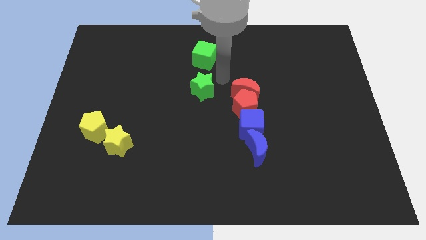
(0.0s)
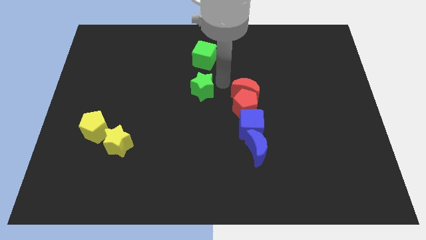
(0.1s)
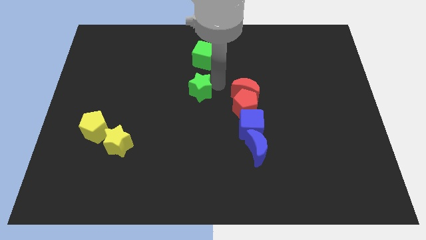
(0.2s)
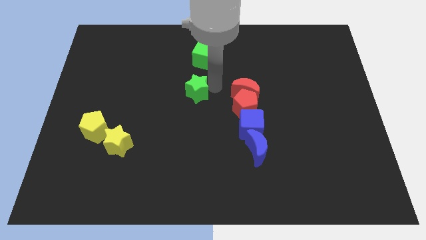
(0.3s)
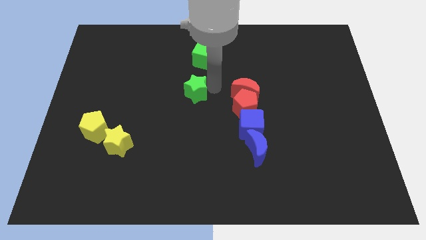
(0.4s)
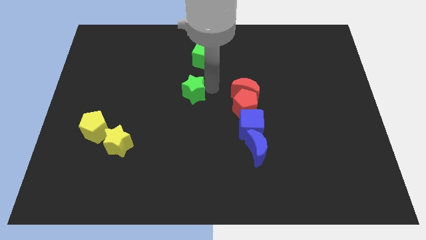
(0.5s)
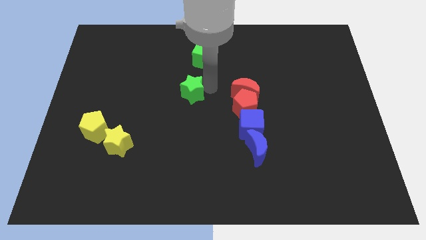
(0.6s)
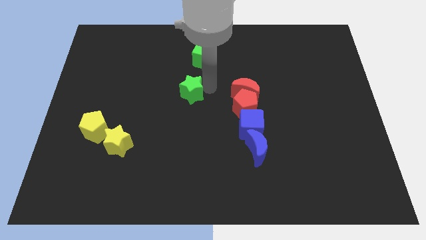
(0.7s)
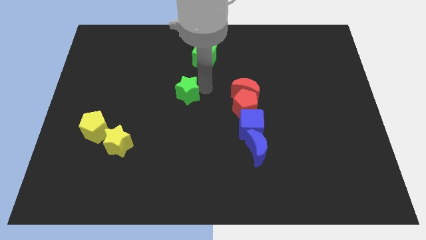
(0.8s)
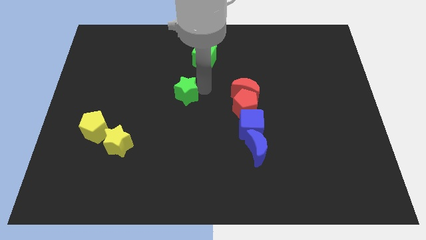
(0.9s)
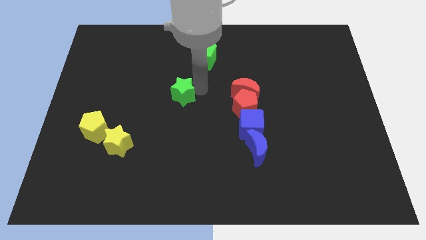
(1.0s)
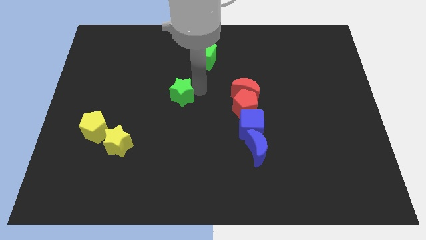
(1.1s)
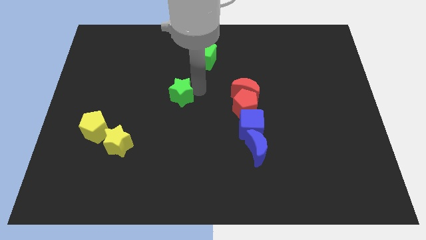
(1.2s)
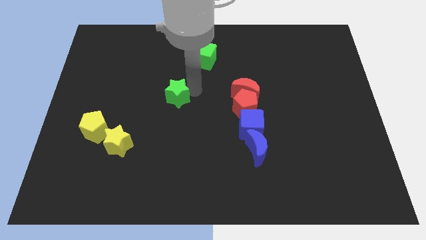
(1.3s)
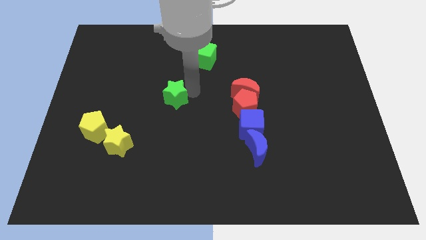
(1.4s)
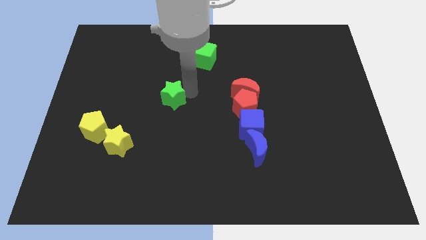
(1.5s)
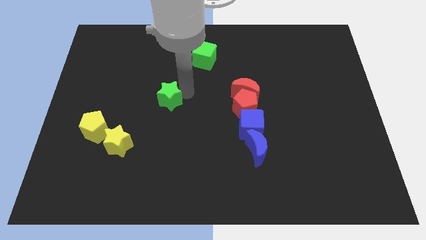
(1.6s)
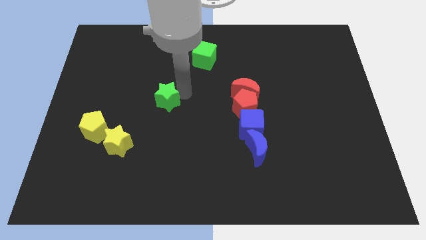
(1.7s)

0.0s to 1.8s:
push the green star diagonally in between the green cube and the yellow star

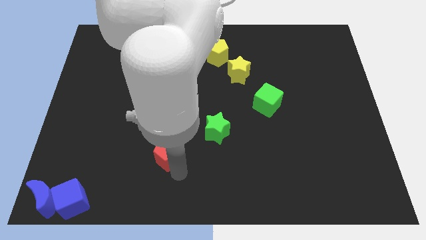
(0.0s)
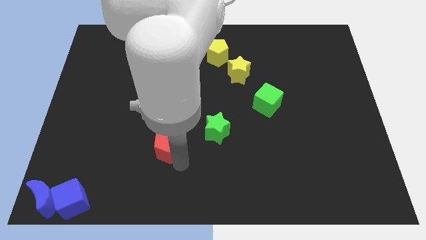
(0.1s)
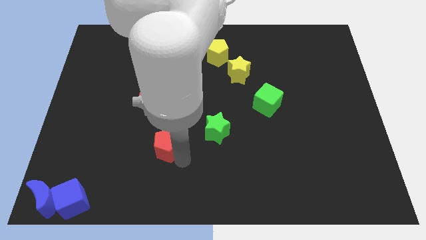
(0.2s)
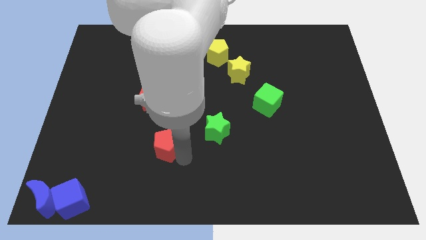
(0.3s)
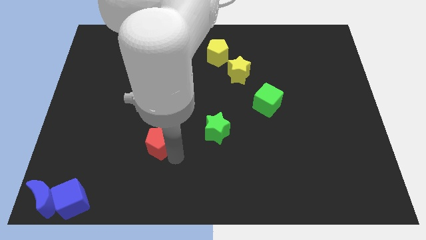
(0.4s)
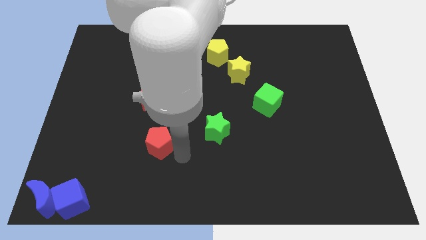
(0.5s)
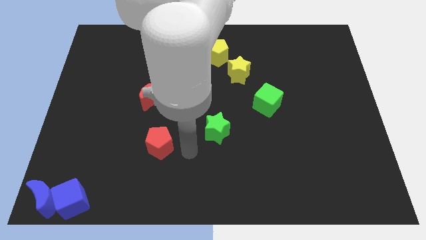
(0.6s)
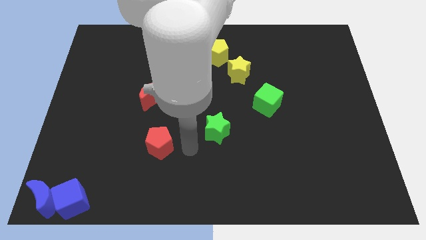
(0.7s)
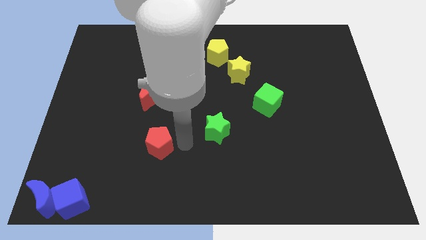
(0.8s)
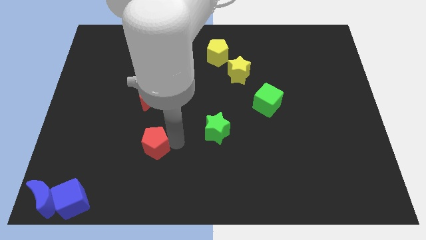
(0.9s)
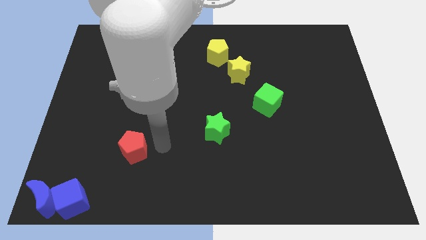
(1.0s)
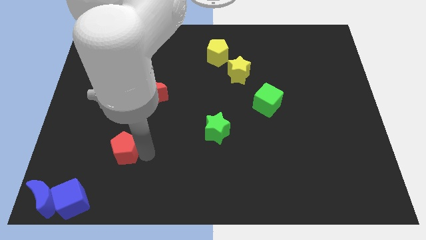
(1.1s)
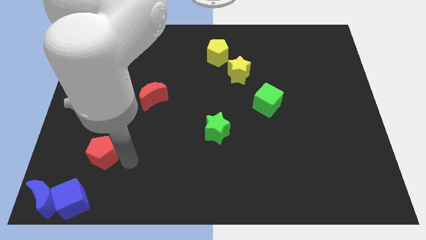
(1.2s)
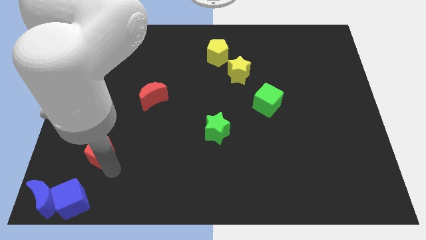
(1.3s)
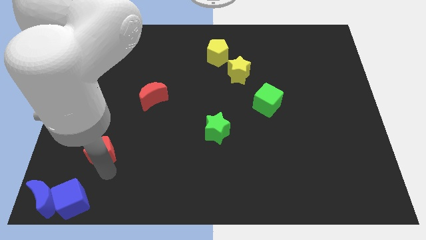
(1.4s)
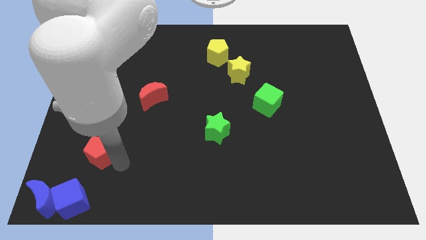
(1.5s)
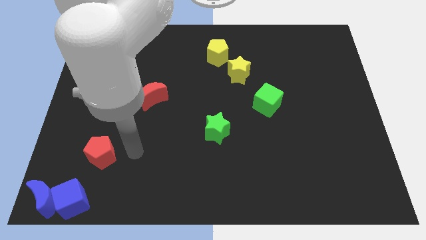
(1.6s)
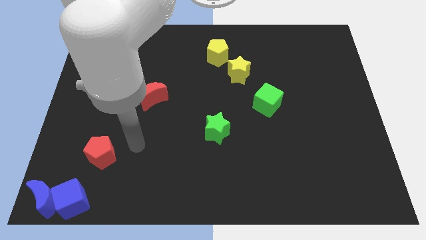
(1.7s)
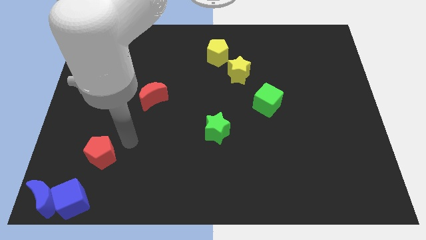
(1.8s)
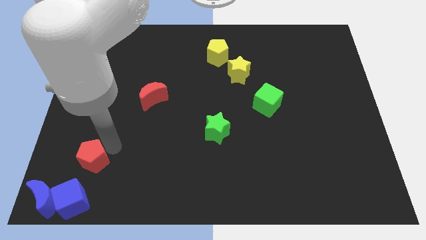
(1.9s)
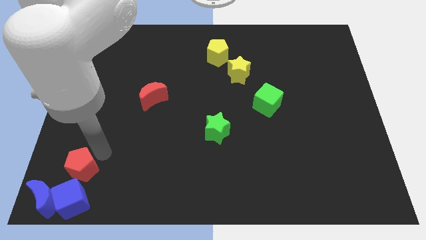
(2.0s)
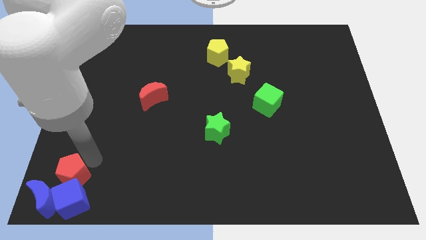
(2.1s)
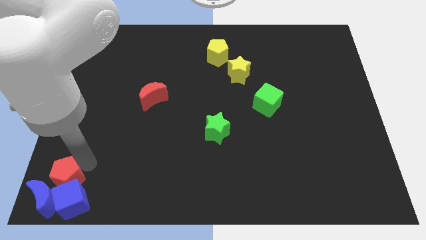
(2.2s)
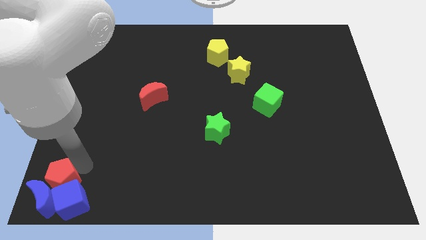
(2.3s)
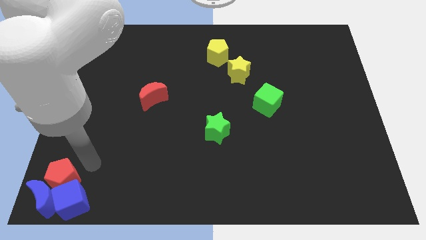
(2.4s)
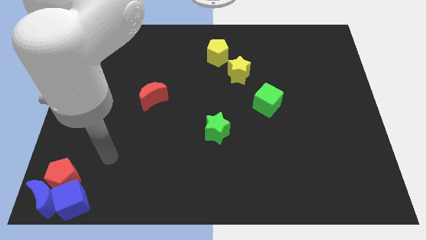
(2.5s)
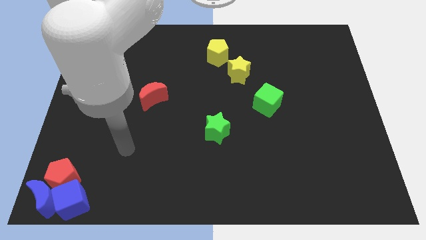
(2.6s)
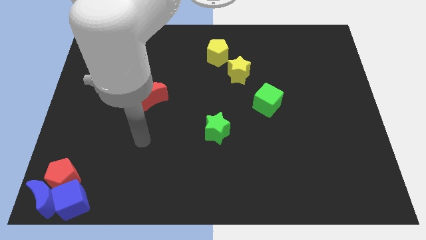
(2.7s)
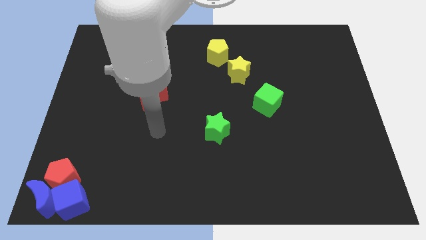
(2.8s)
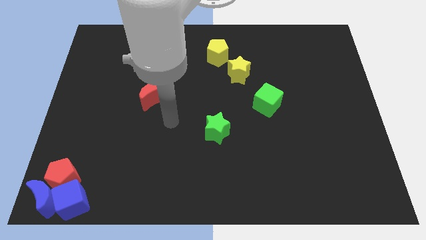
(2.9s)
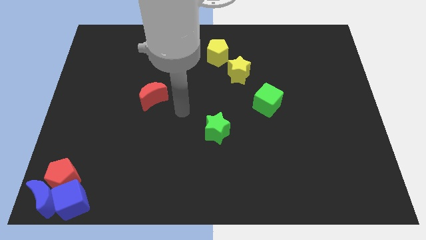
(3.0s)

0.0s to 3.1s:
push red pentagon above the blue blocks

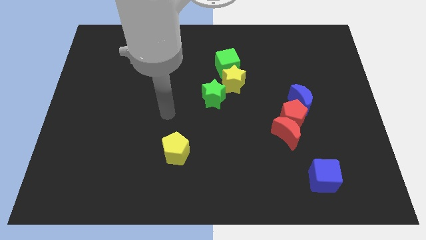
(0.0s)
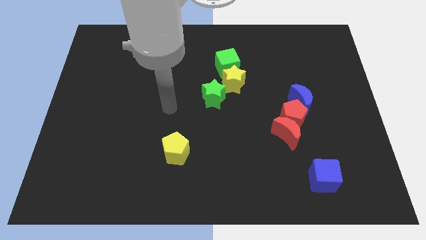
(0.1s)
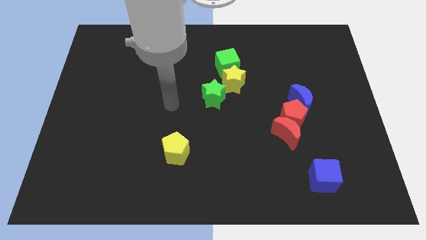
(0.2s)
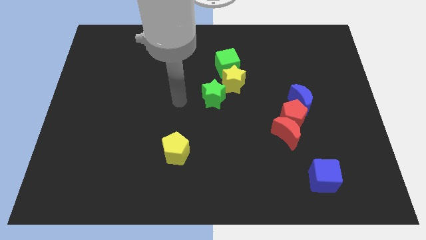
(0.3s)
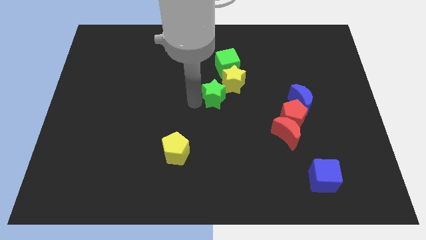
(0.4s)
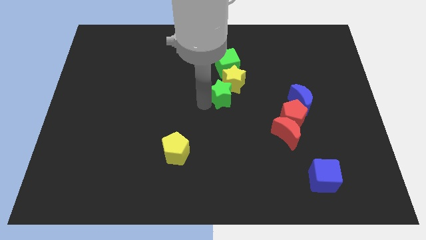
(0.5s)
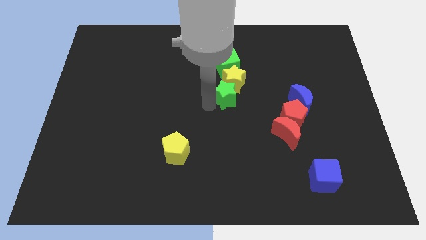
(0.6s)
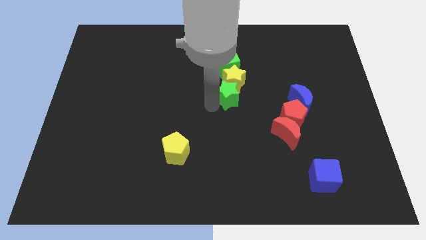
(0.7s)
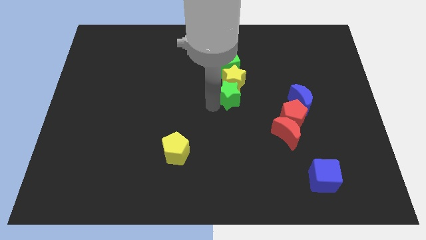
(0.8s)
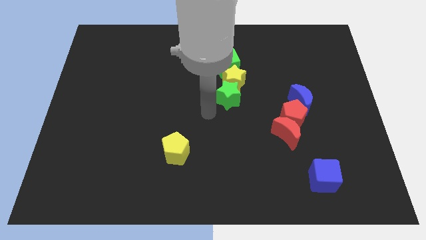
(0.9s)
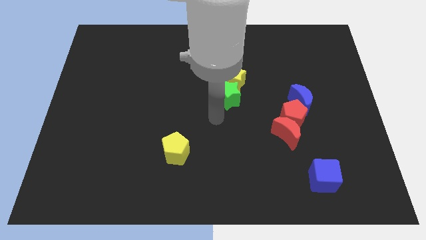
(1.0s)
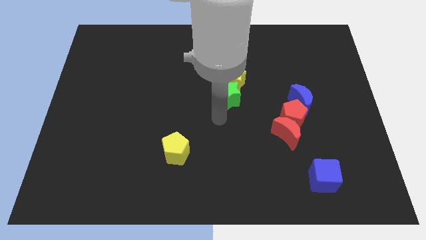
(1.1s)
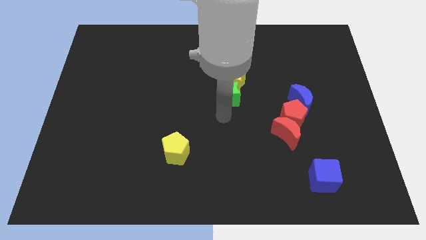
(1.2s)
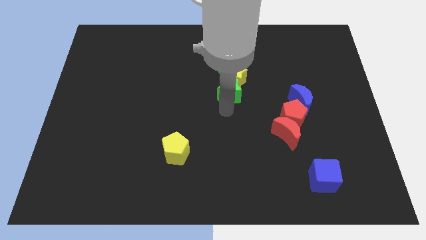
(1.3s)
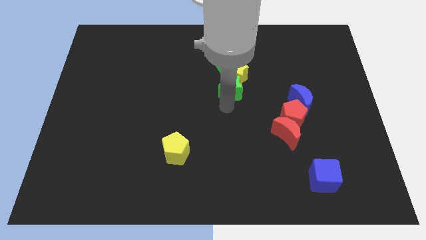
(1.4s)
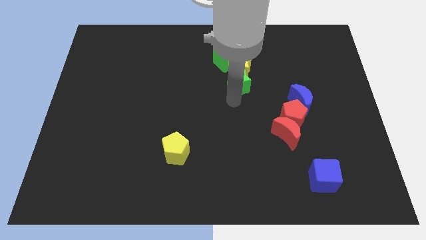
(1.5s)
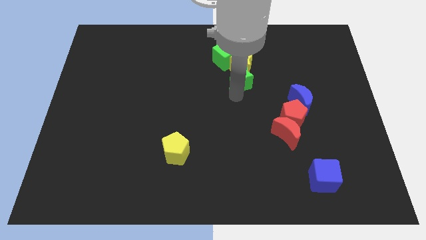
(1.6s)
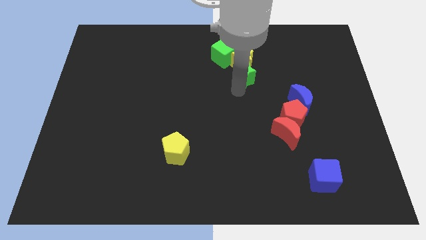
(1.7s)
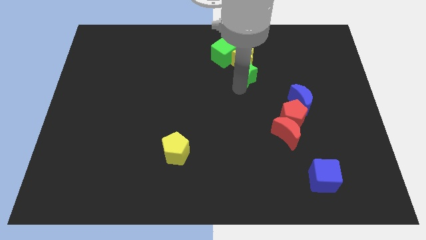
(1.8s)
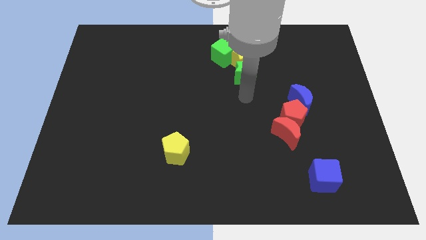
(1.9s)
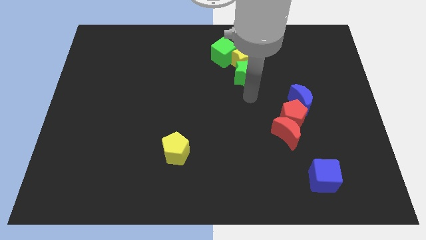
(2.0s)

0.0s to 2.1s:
push the green star yellow star and green cube together towards the top center

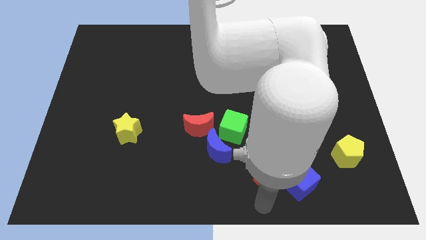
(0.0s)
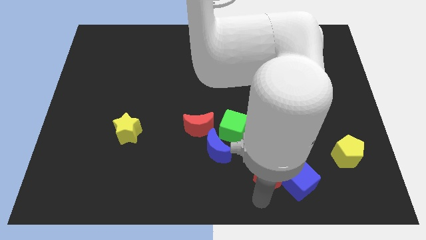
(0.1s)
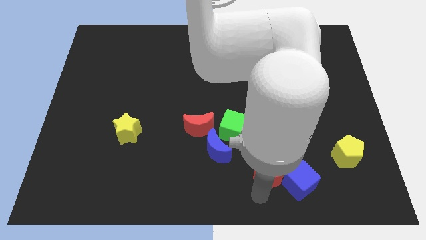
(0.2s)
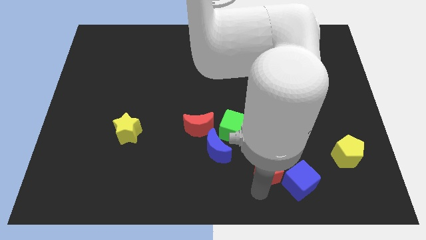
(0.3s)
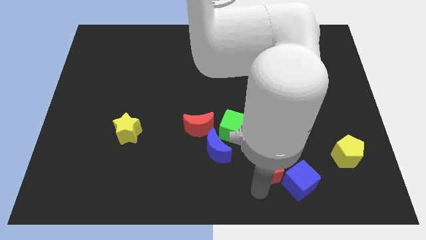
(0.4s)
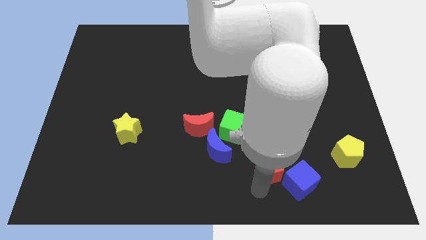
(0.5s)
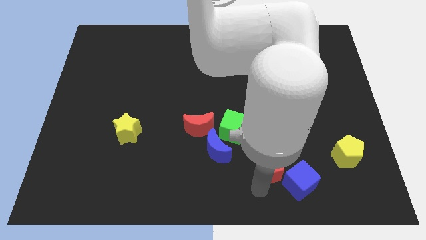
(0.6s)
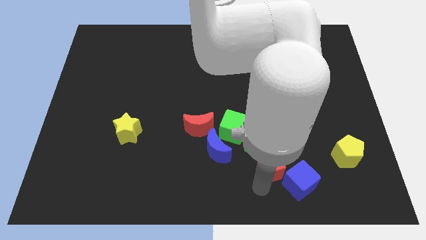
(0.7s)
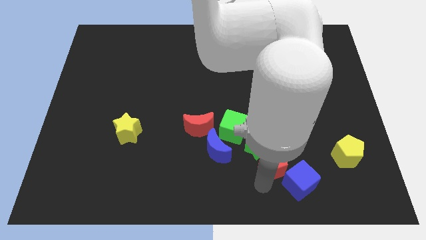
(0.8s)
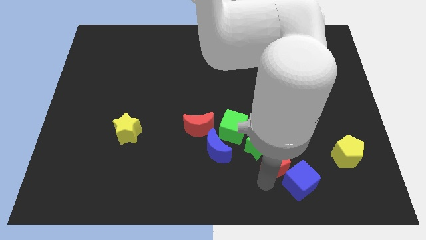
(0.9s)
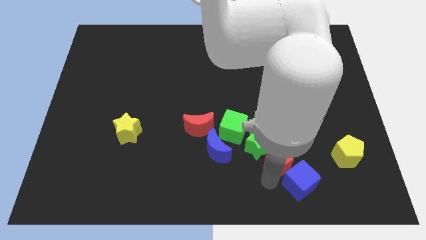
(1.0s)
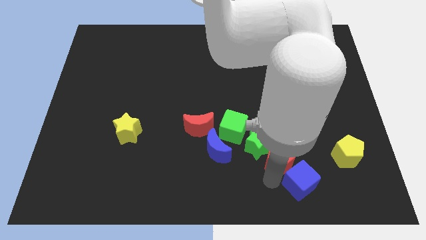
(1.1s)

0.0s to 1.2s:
place the red pentagon in between the green star and blue cube

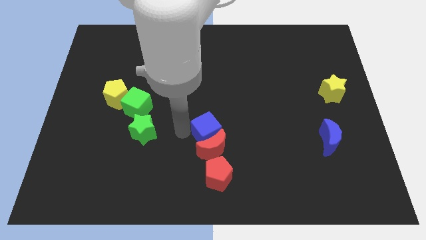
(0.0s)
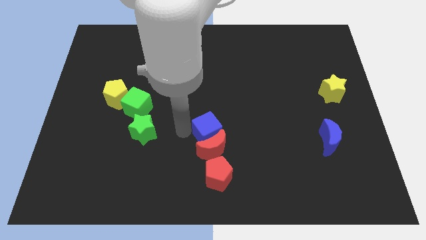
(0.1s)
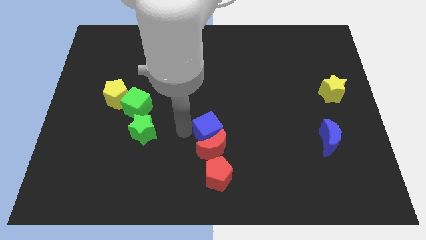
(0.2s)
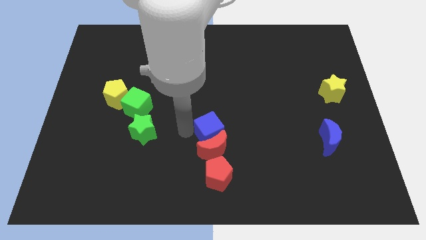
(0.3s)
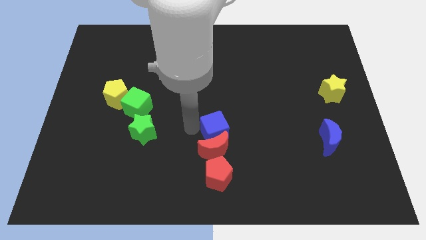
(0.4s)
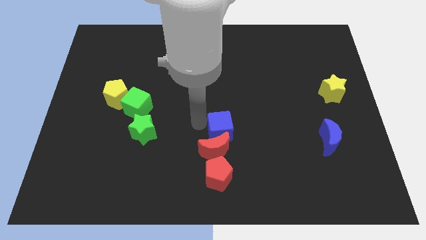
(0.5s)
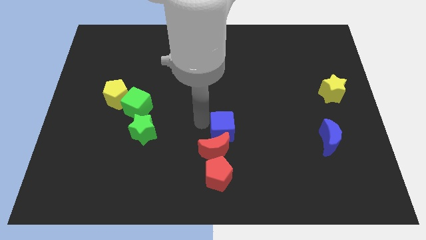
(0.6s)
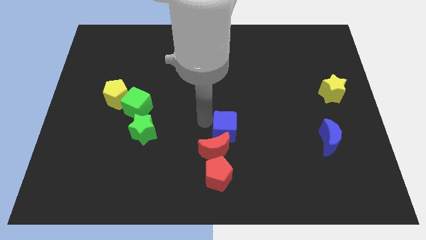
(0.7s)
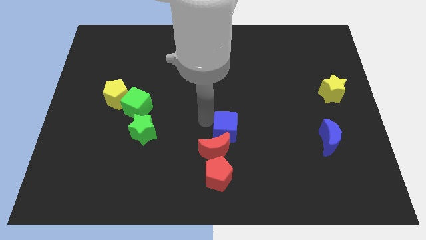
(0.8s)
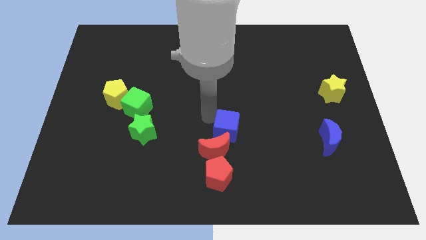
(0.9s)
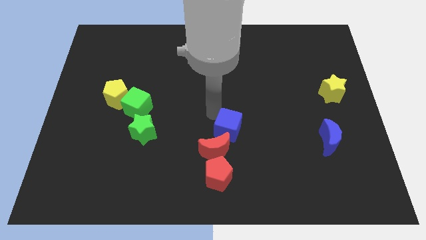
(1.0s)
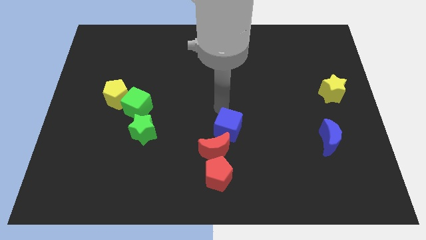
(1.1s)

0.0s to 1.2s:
push the blue cube and red crescent to the centre of the board
